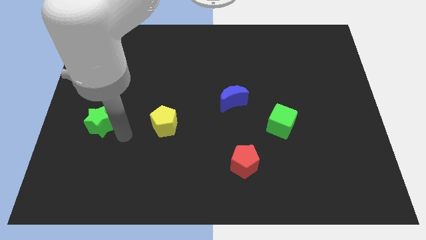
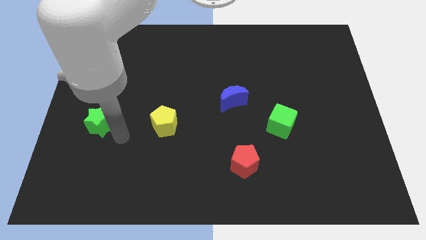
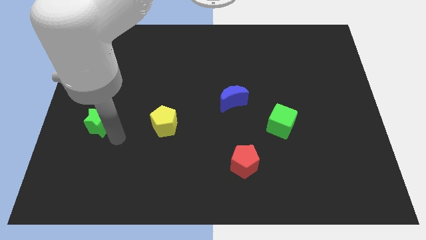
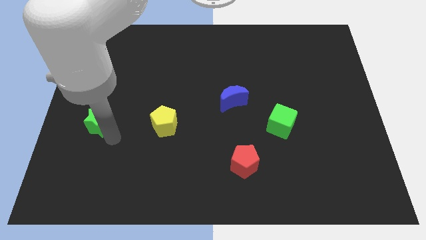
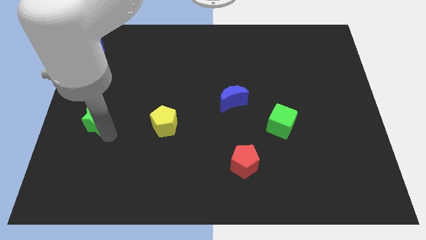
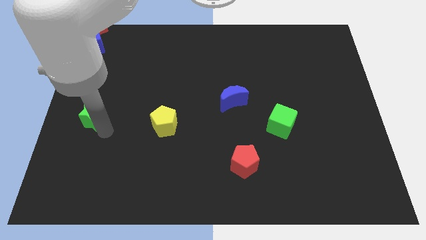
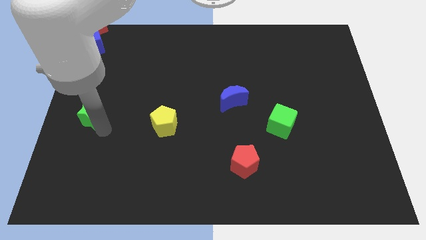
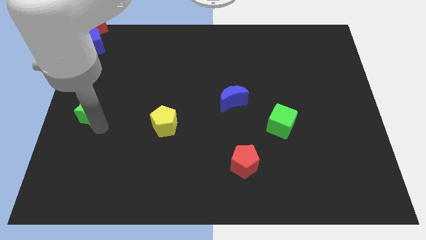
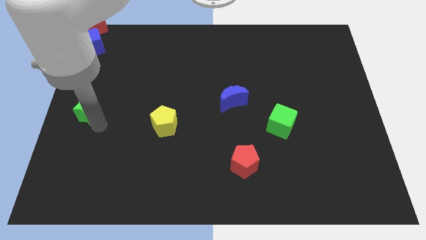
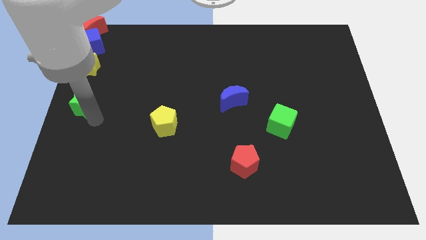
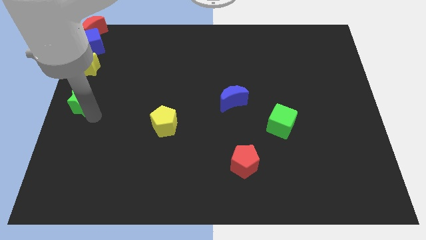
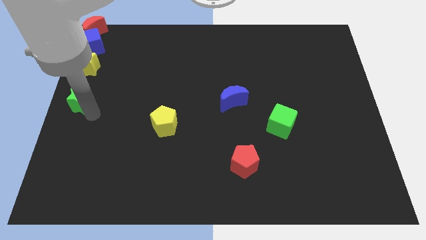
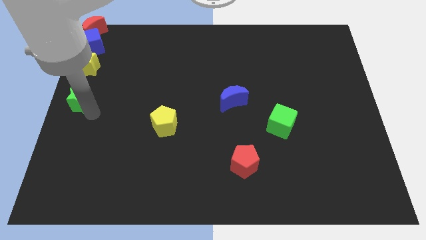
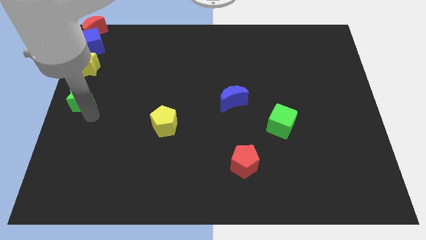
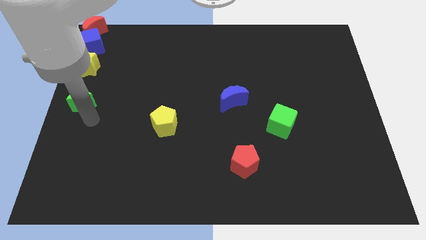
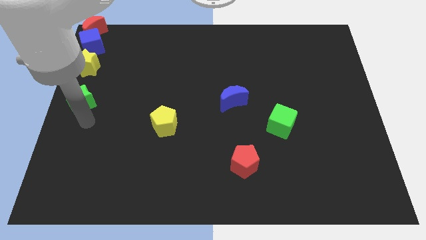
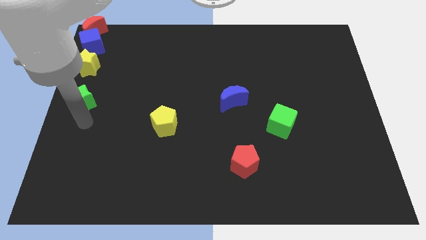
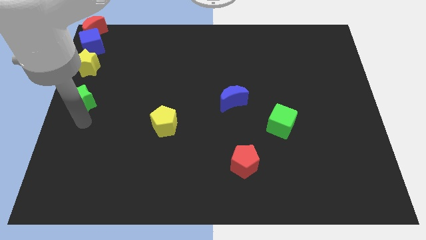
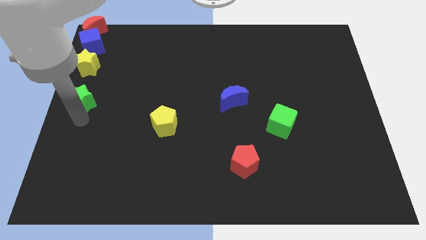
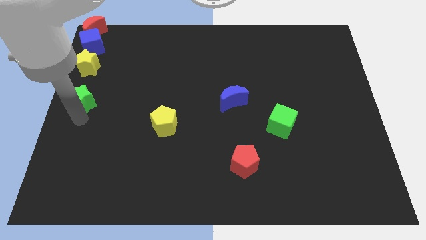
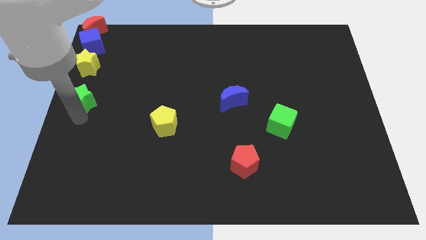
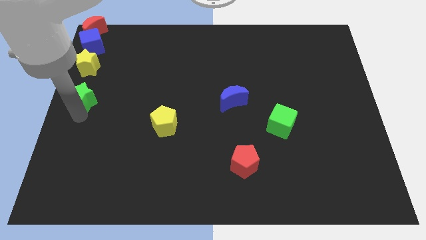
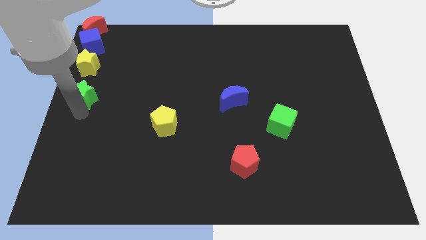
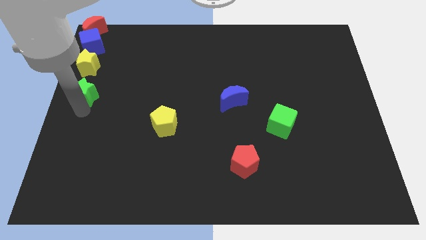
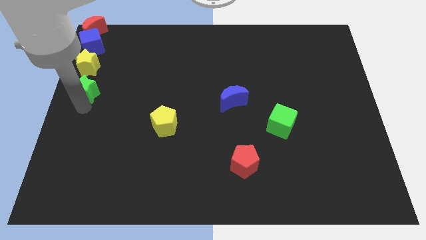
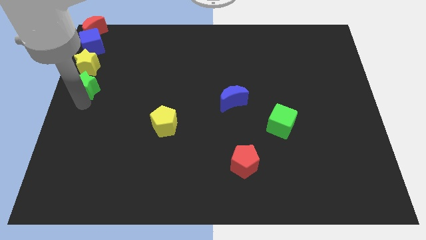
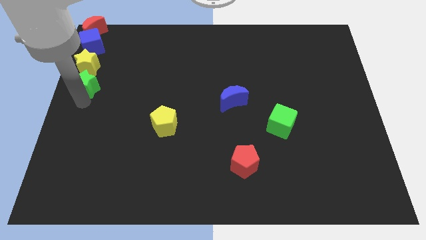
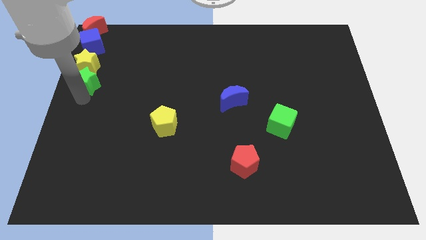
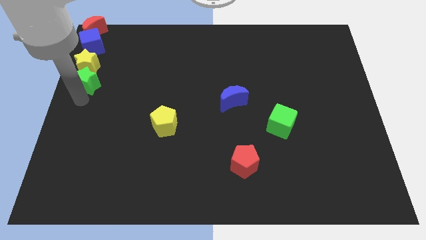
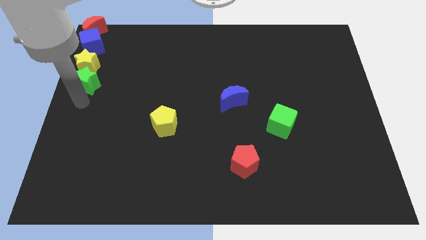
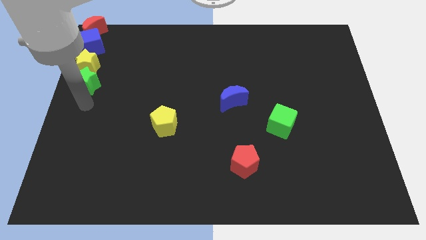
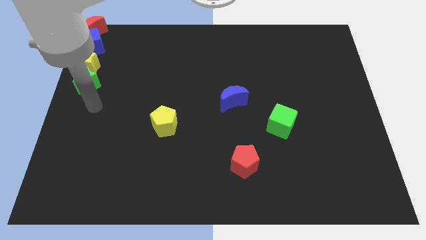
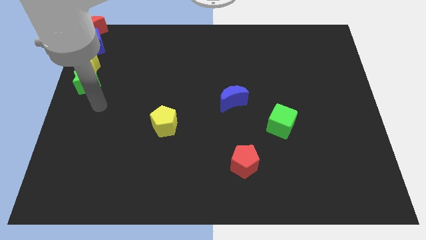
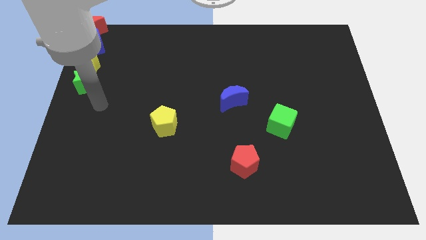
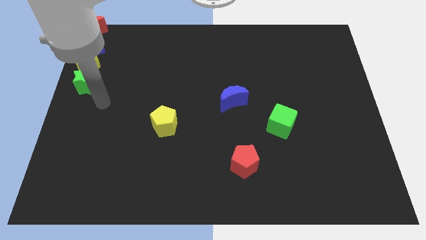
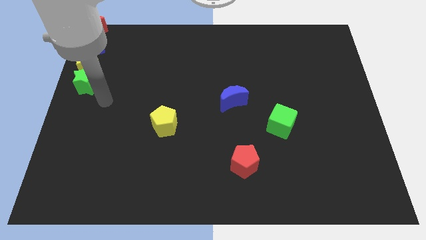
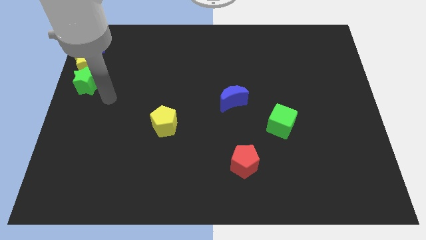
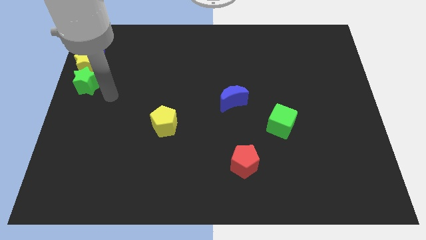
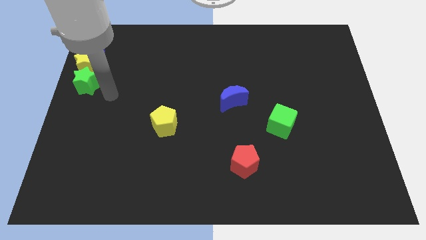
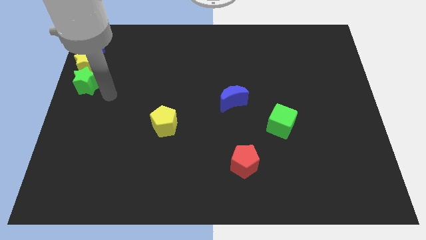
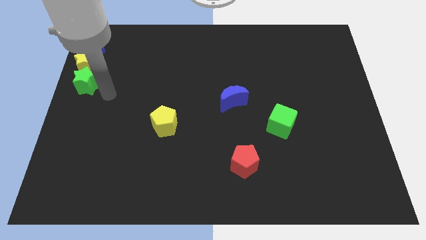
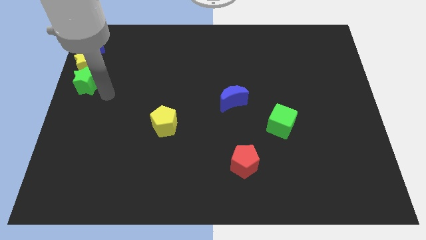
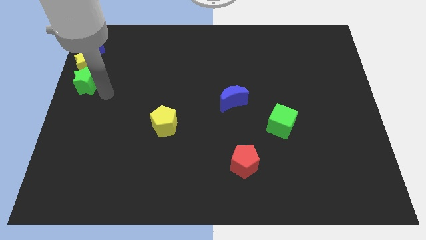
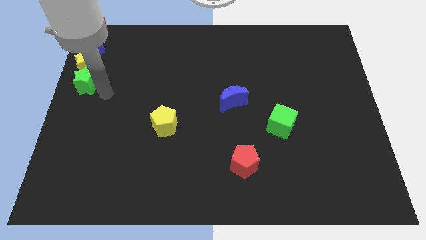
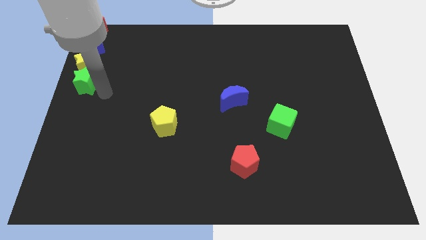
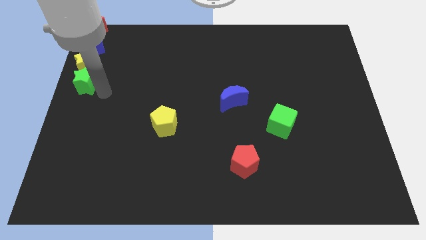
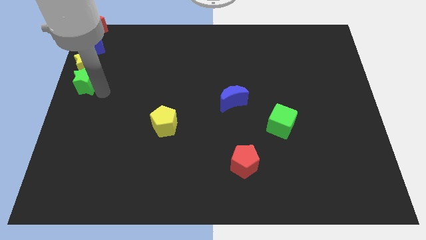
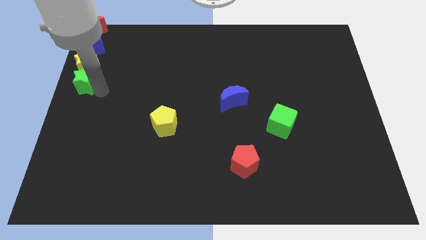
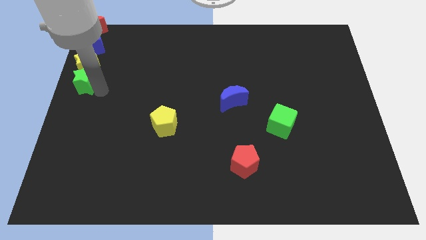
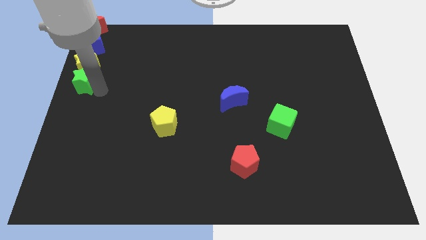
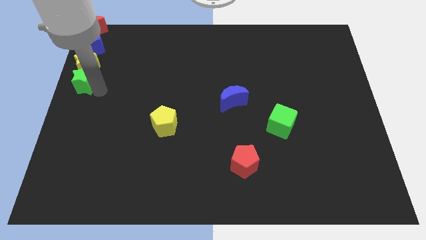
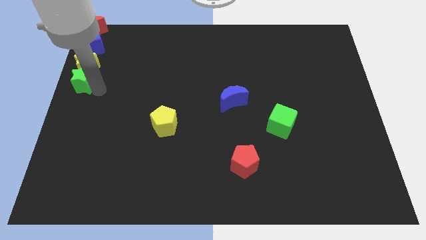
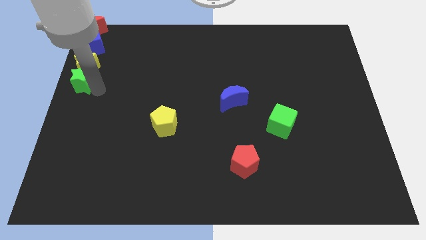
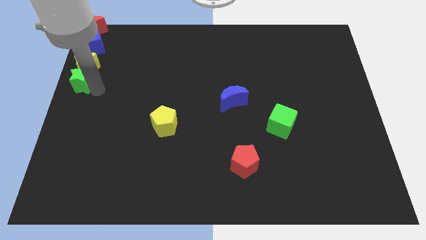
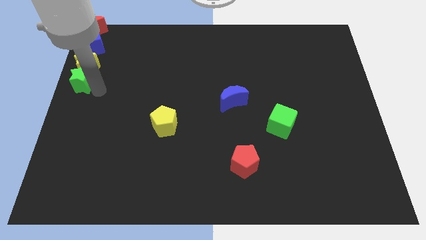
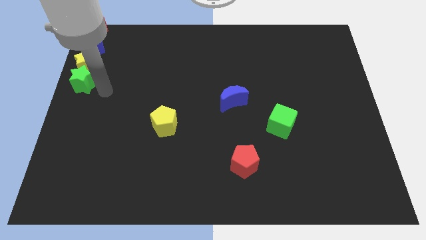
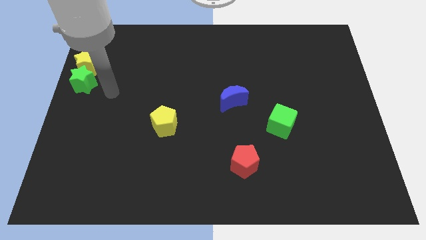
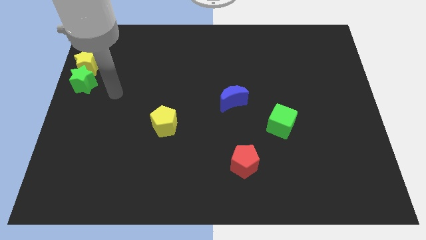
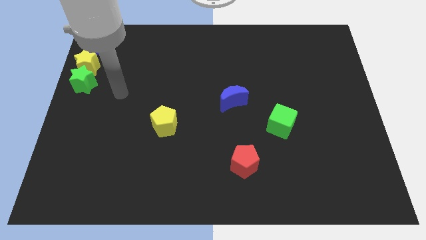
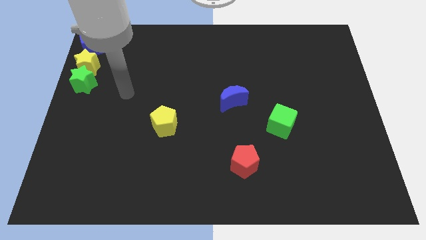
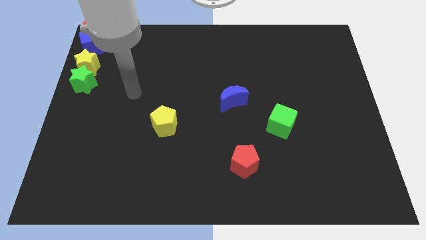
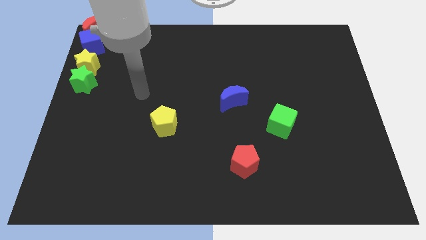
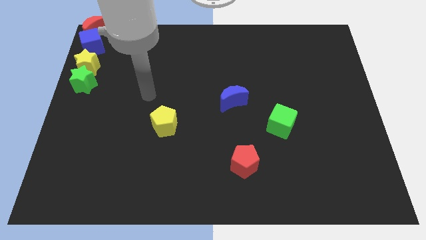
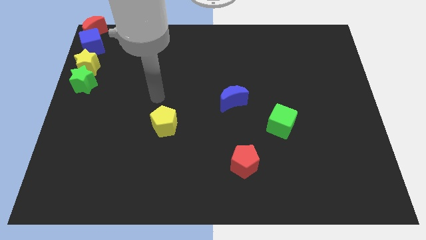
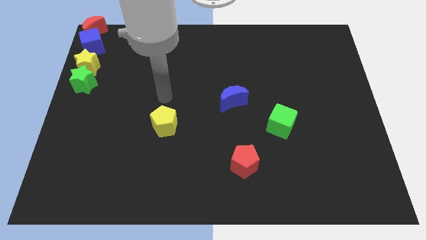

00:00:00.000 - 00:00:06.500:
move the green star to the bottom of the yellow in alignment with the left side of the board

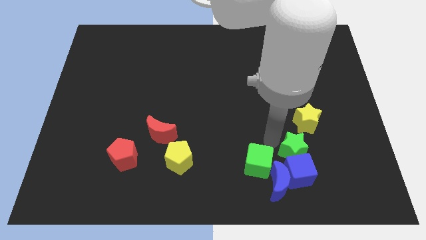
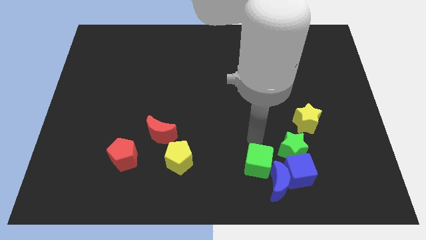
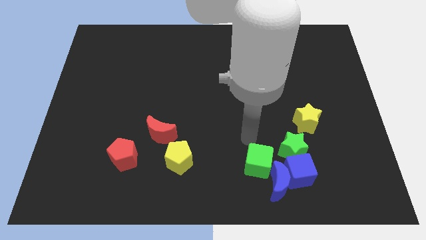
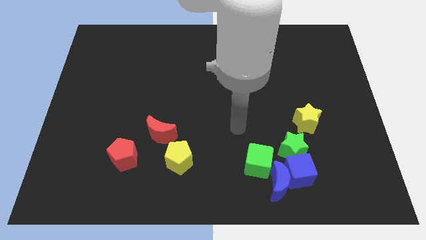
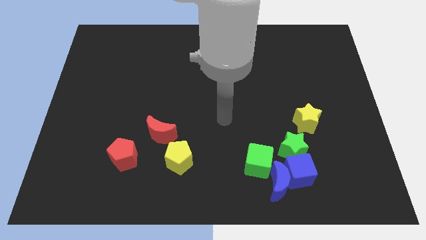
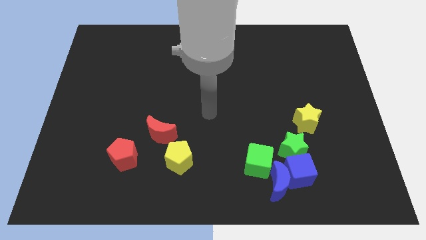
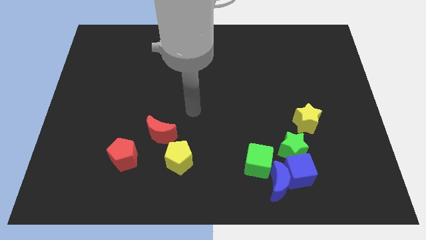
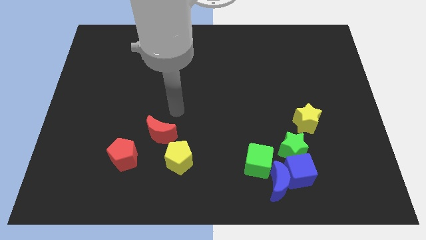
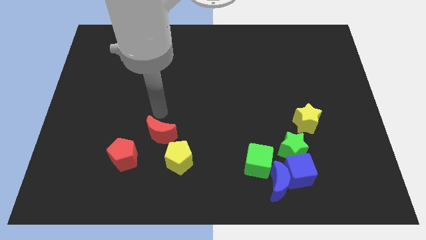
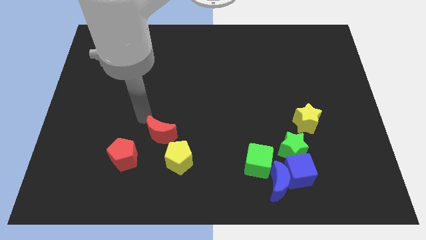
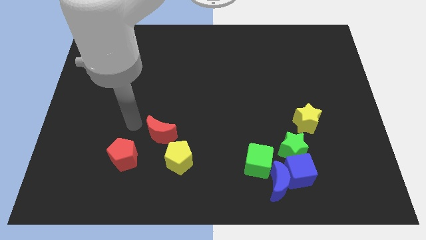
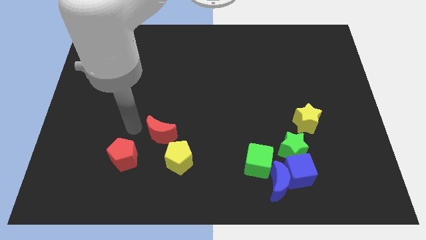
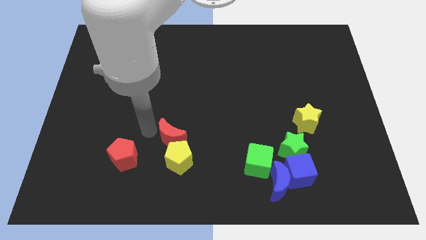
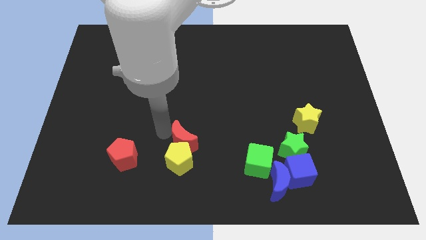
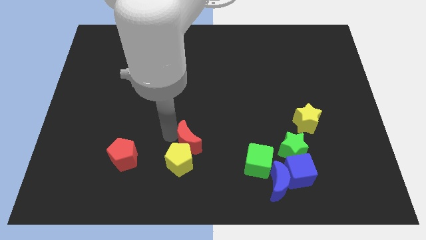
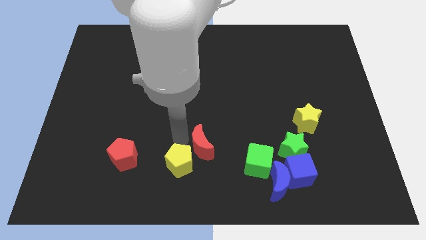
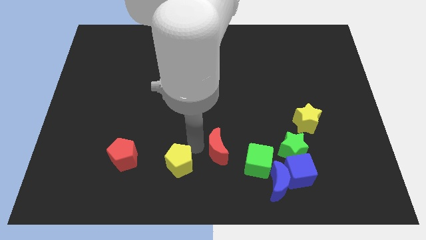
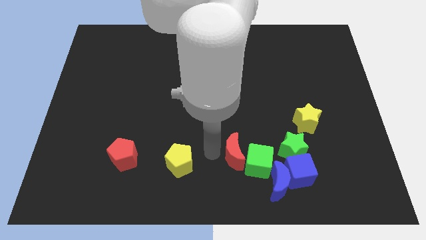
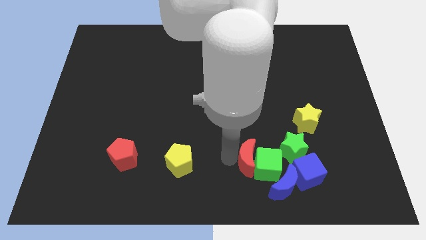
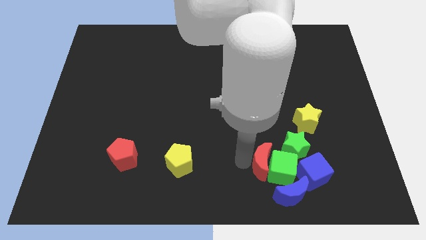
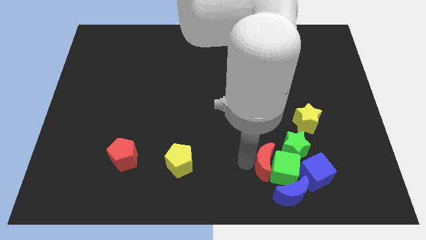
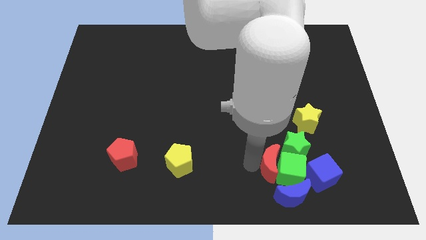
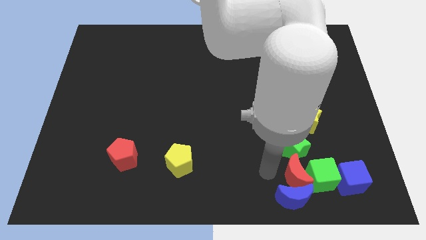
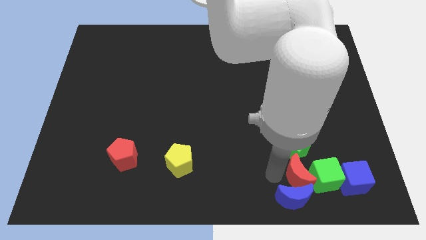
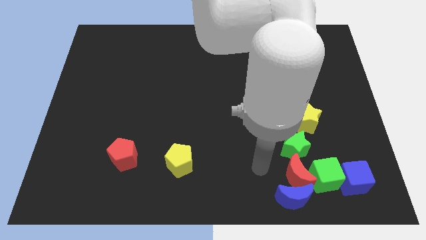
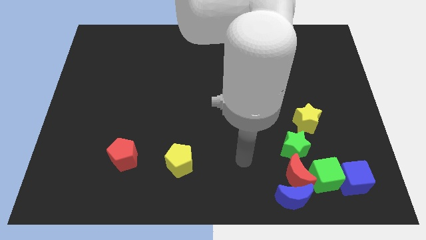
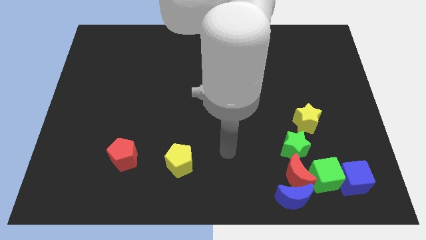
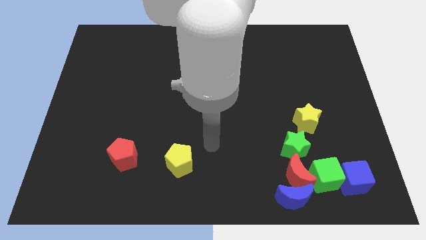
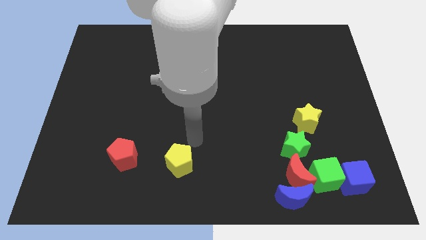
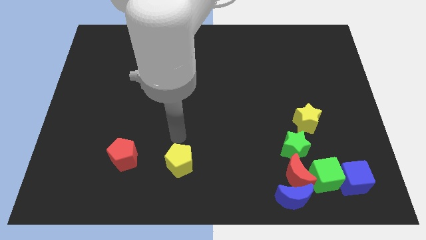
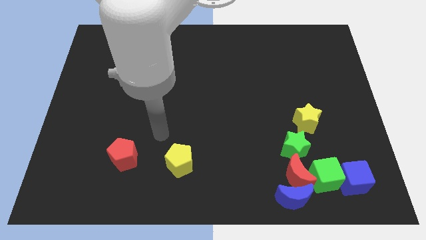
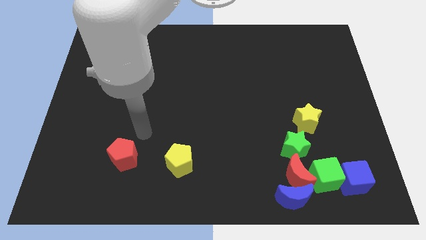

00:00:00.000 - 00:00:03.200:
push the red crescent in to the green cube
